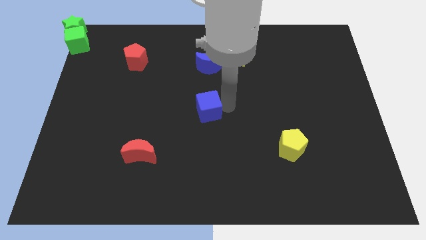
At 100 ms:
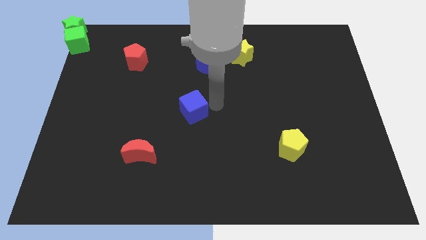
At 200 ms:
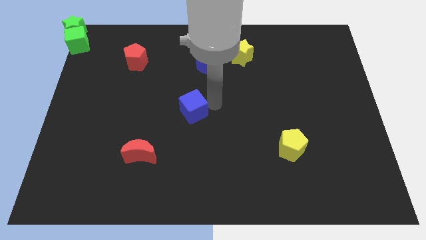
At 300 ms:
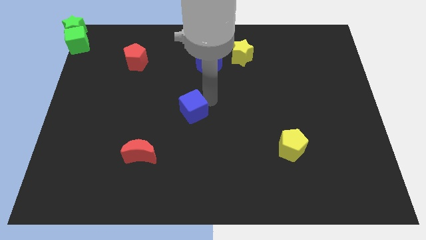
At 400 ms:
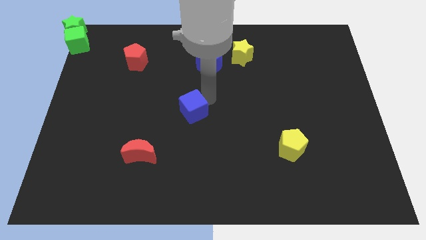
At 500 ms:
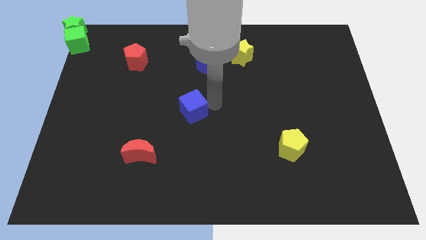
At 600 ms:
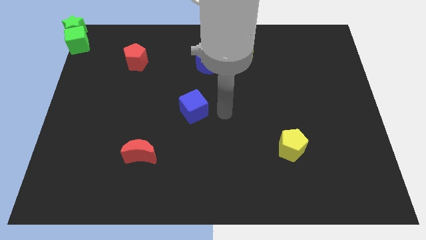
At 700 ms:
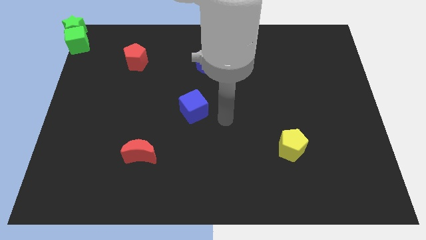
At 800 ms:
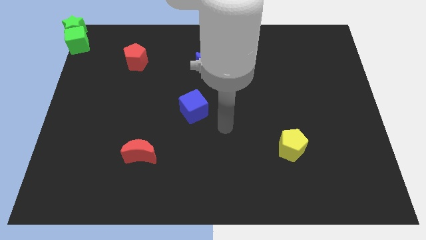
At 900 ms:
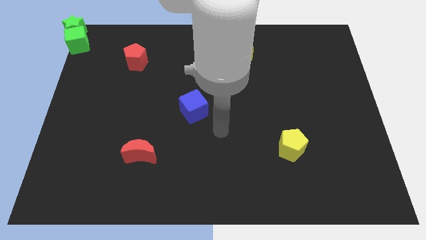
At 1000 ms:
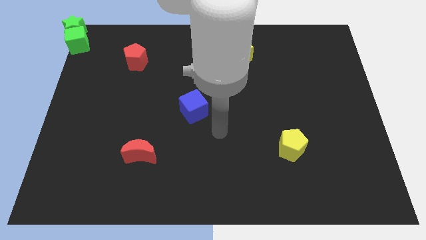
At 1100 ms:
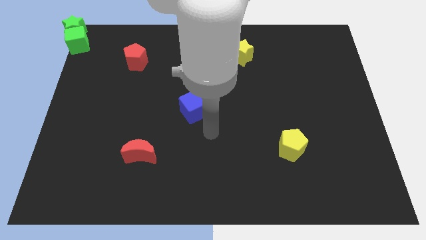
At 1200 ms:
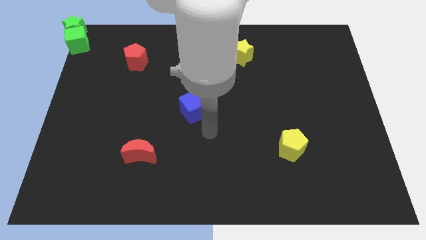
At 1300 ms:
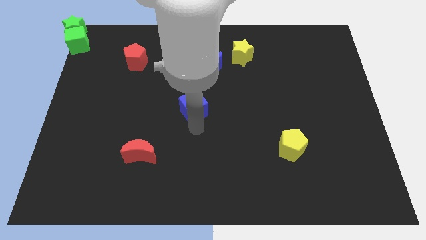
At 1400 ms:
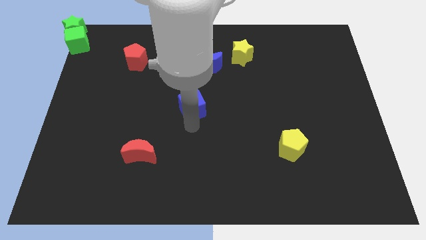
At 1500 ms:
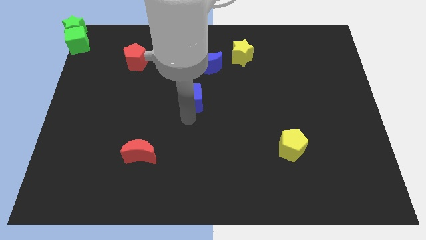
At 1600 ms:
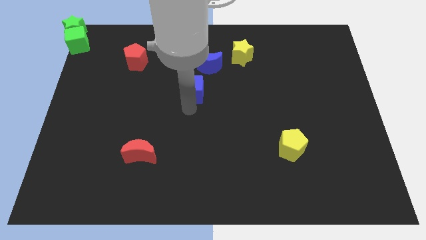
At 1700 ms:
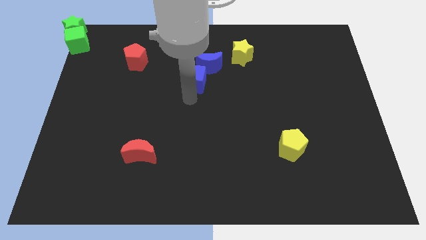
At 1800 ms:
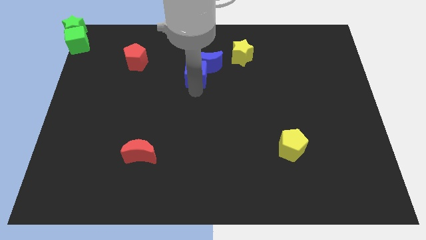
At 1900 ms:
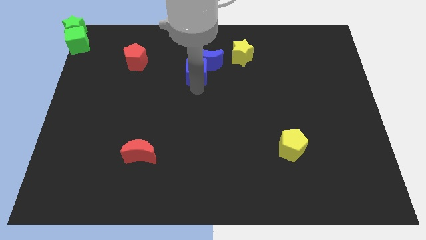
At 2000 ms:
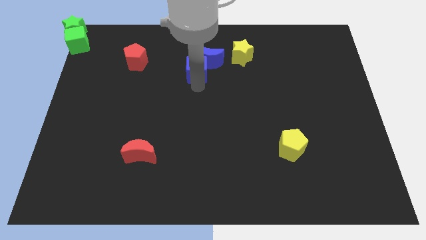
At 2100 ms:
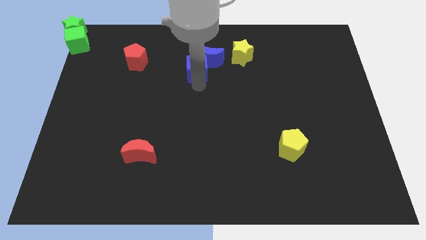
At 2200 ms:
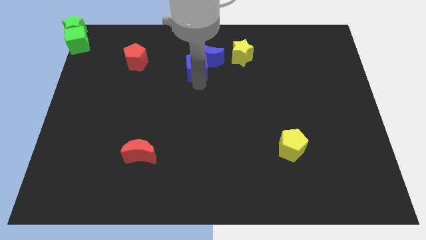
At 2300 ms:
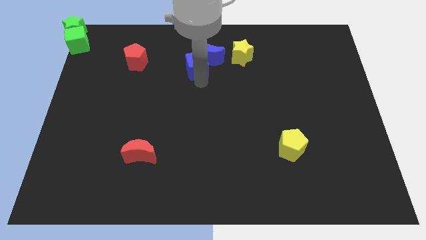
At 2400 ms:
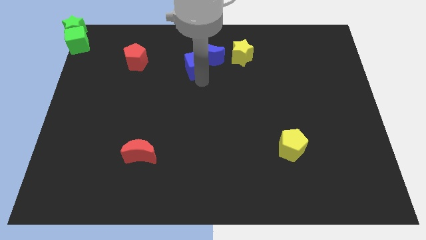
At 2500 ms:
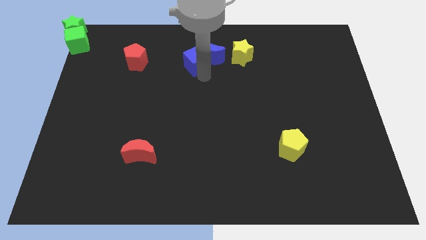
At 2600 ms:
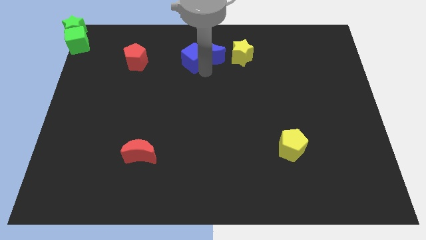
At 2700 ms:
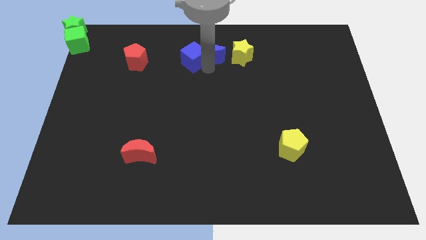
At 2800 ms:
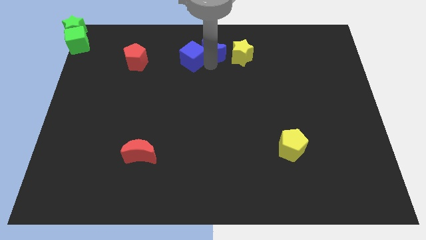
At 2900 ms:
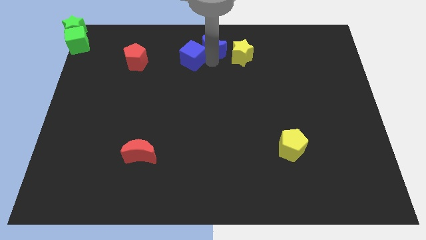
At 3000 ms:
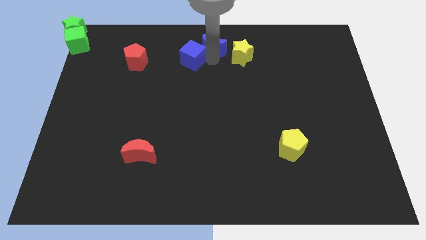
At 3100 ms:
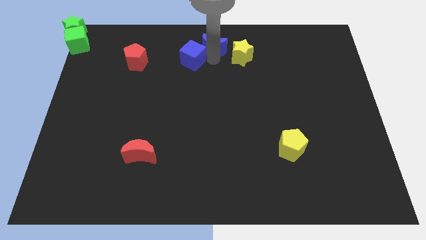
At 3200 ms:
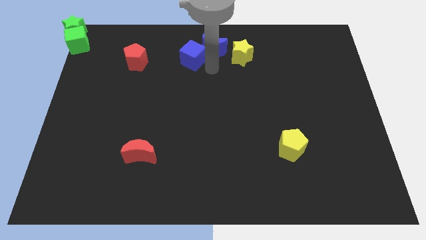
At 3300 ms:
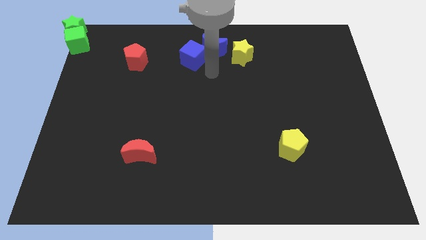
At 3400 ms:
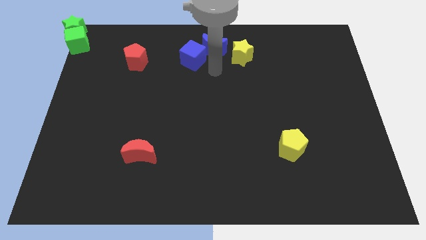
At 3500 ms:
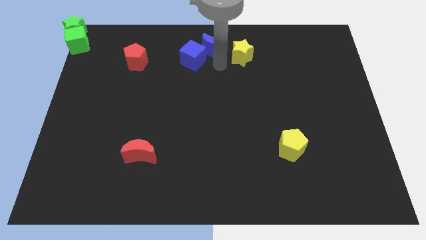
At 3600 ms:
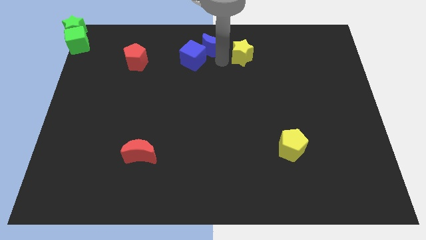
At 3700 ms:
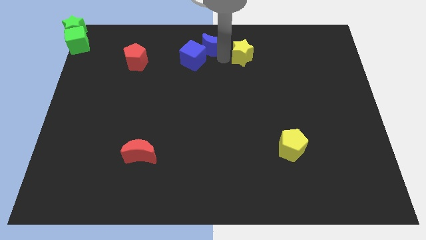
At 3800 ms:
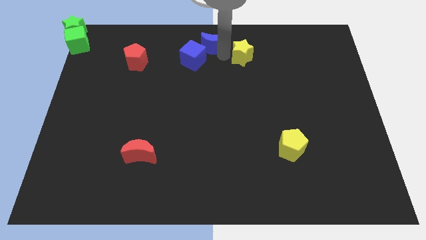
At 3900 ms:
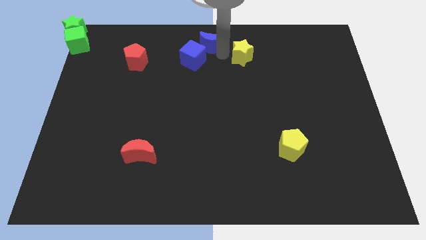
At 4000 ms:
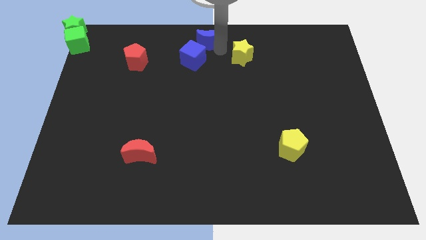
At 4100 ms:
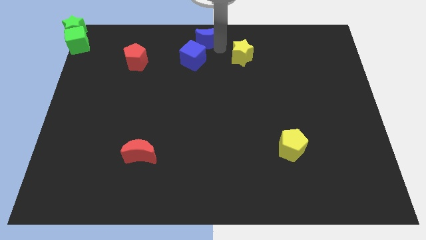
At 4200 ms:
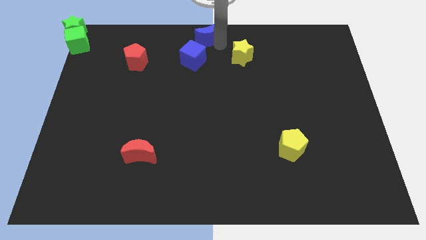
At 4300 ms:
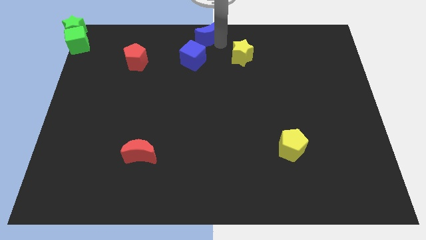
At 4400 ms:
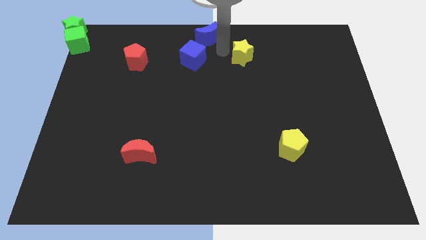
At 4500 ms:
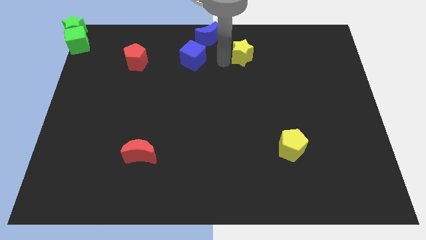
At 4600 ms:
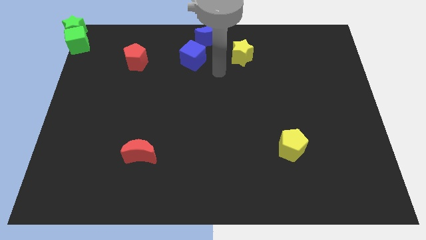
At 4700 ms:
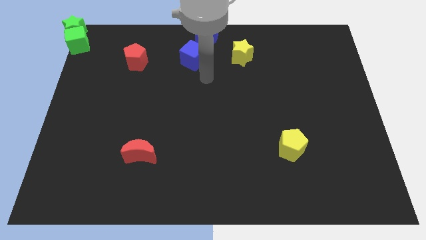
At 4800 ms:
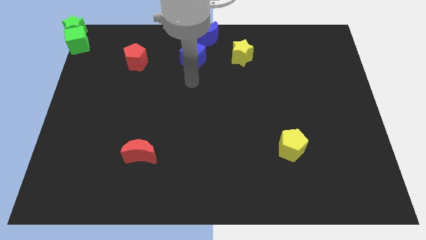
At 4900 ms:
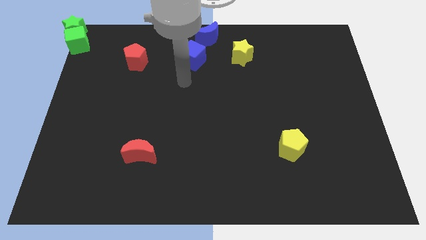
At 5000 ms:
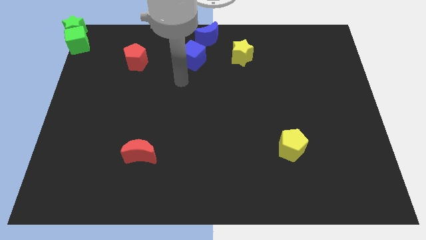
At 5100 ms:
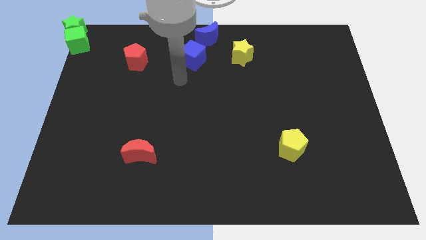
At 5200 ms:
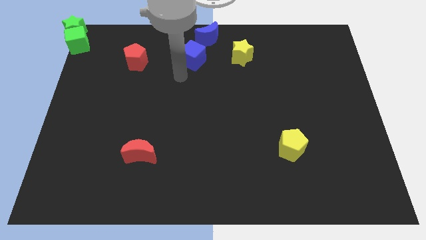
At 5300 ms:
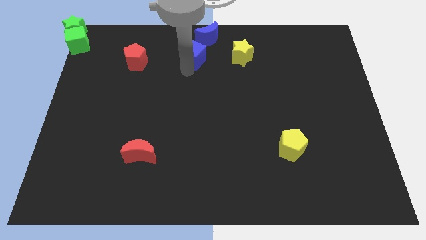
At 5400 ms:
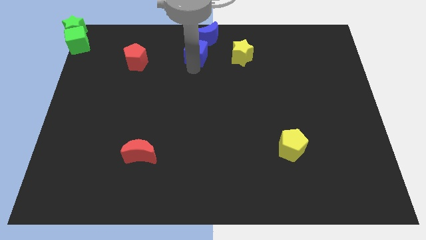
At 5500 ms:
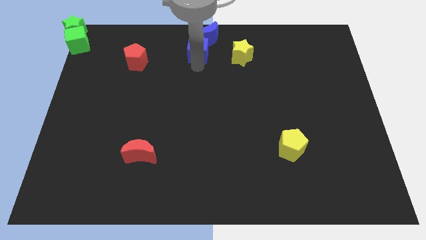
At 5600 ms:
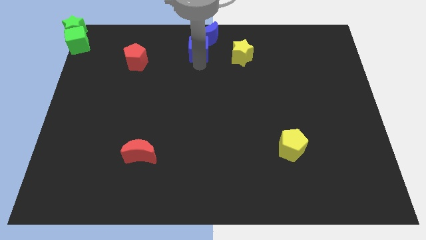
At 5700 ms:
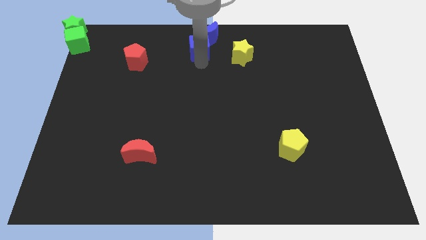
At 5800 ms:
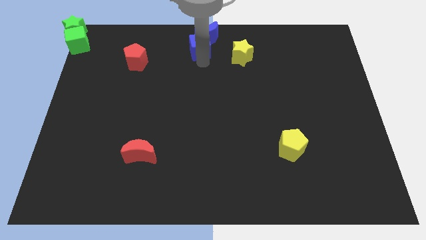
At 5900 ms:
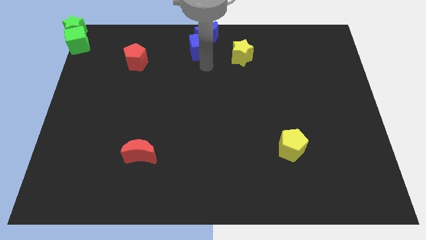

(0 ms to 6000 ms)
push the blue blocks to top center of the board

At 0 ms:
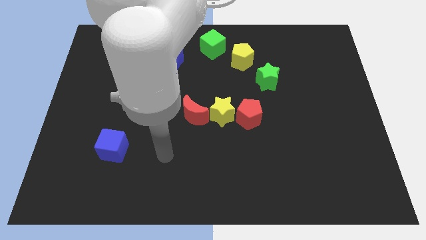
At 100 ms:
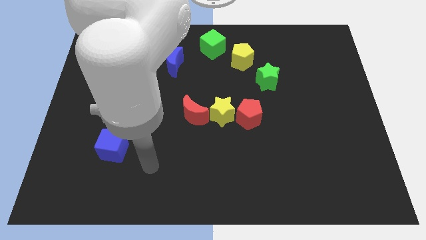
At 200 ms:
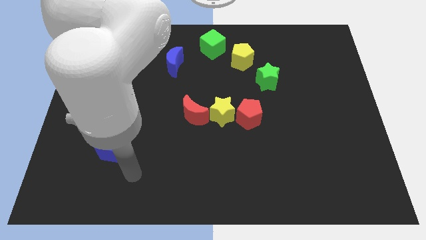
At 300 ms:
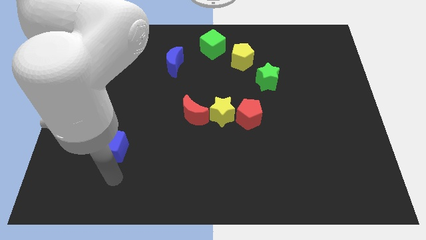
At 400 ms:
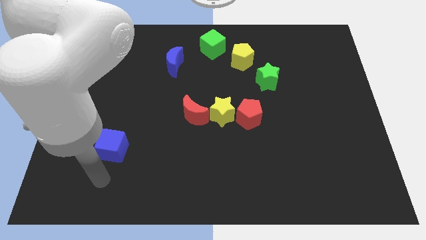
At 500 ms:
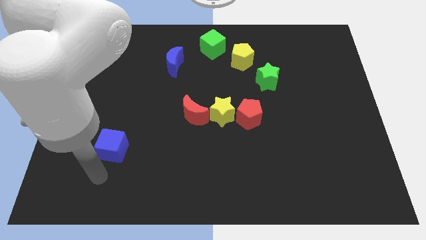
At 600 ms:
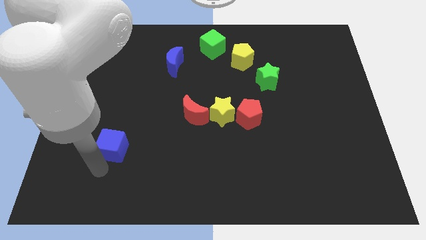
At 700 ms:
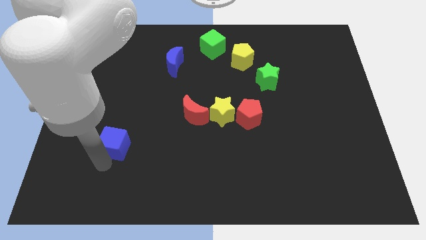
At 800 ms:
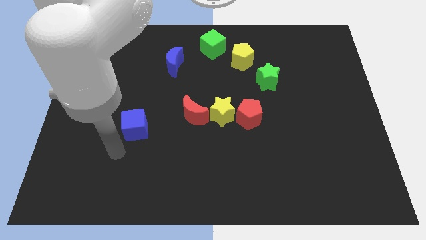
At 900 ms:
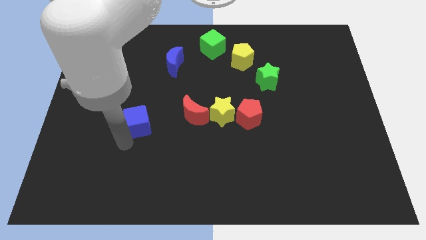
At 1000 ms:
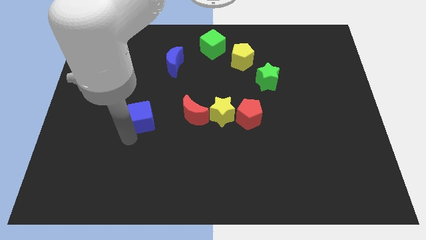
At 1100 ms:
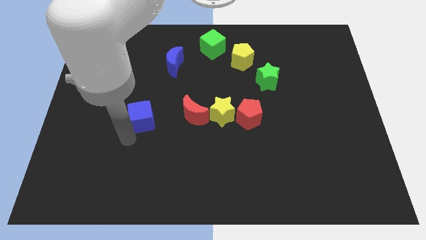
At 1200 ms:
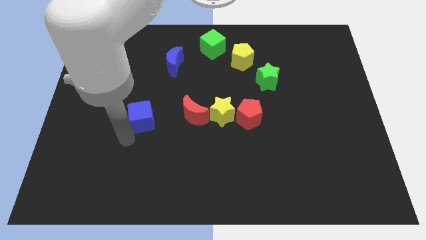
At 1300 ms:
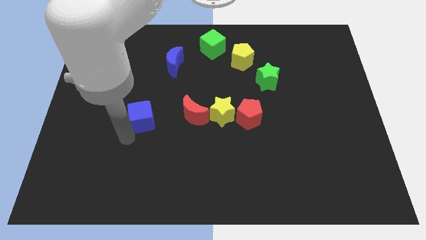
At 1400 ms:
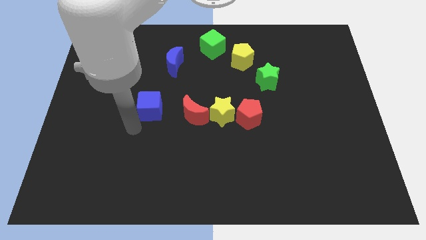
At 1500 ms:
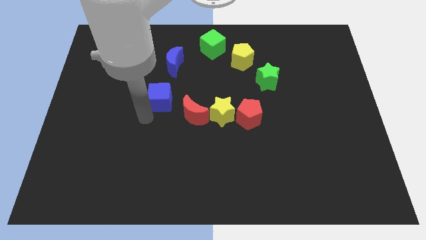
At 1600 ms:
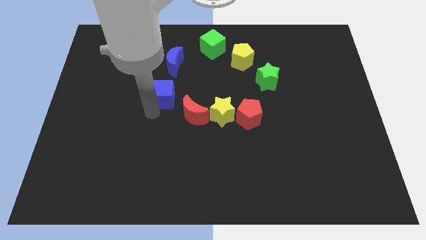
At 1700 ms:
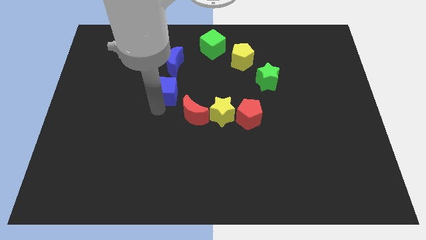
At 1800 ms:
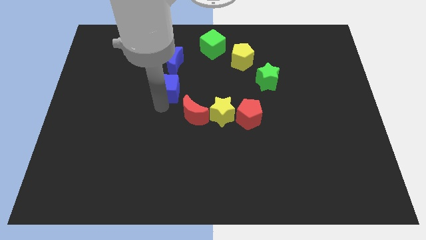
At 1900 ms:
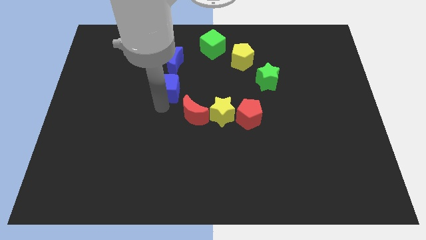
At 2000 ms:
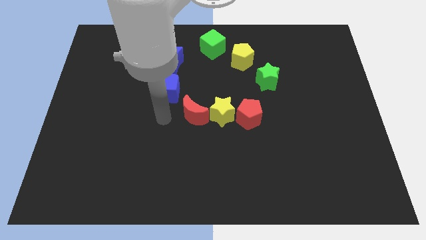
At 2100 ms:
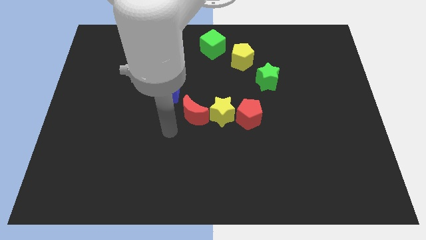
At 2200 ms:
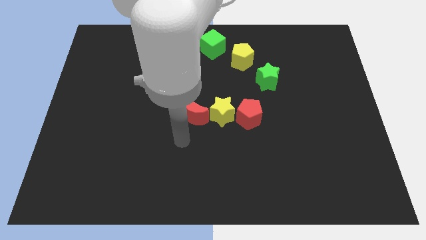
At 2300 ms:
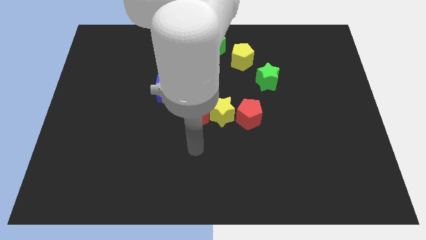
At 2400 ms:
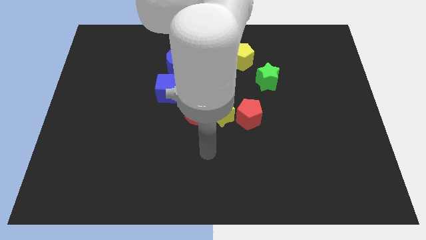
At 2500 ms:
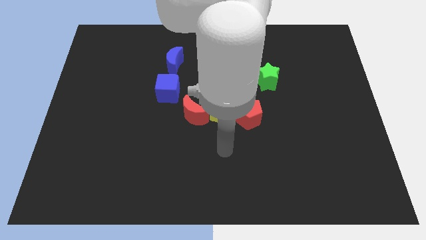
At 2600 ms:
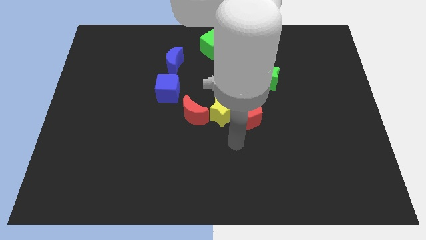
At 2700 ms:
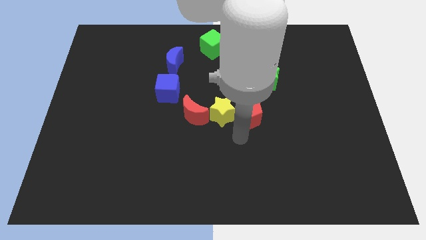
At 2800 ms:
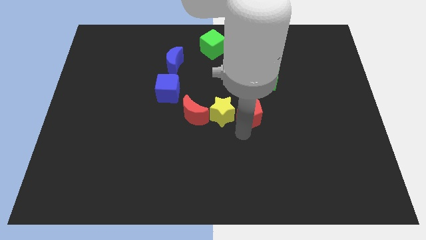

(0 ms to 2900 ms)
move the blue cube into blue moon

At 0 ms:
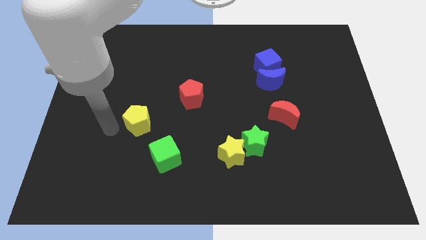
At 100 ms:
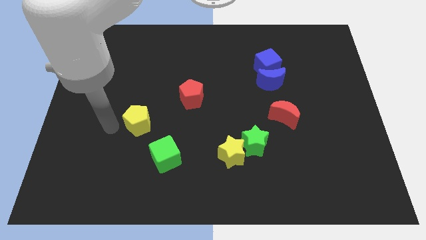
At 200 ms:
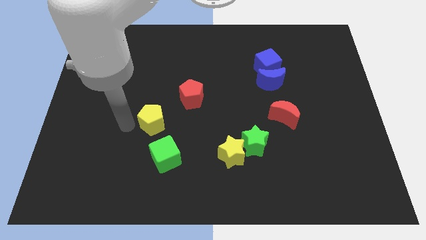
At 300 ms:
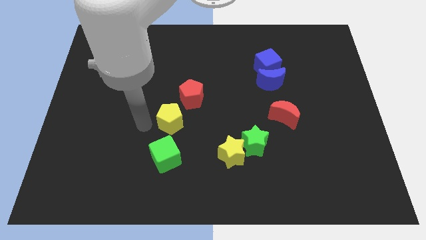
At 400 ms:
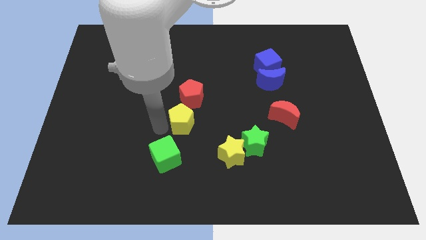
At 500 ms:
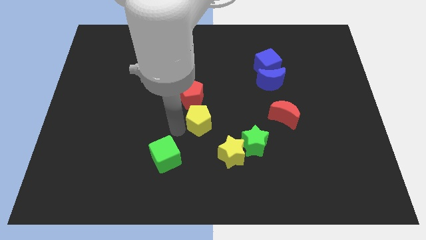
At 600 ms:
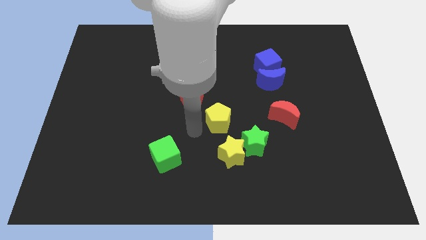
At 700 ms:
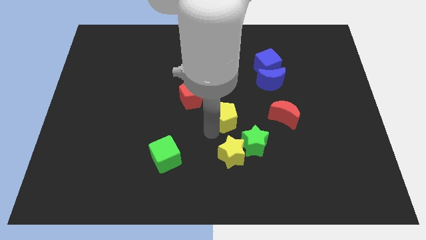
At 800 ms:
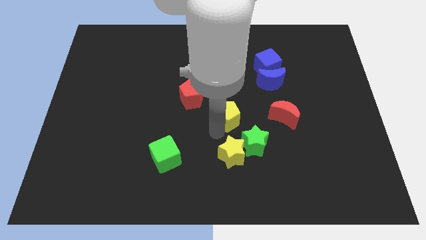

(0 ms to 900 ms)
move yellow pentagon above yellow star
